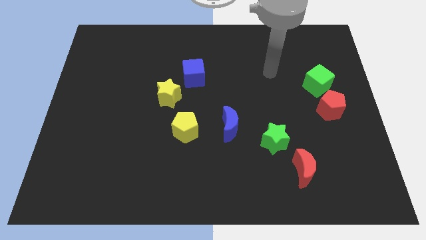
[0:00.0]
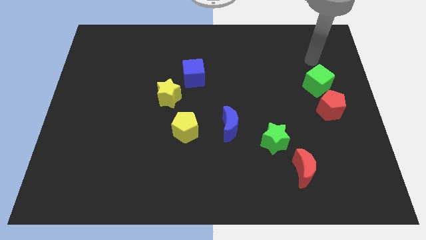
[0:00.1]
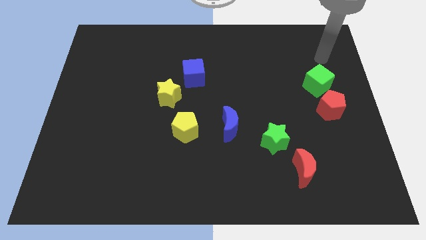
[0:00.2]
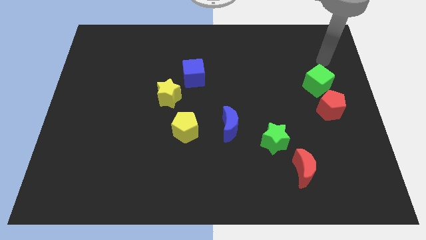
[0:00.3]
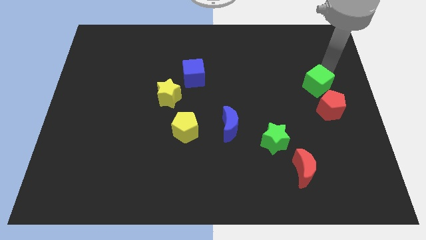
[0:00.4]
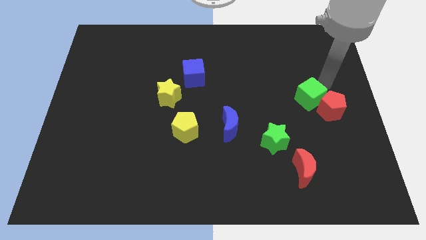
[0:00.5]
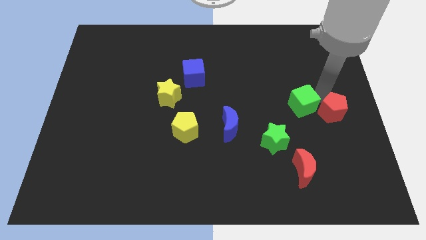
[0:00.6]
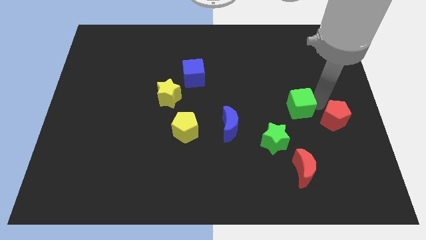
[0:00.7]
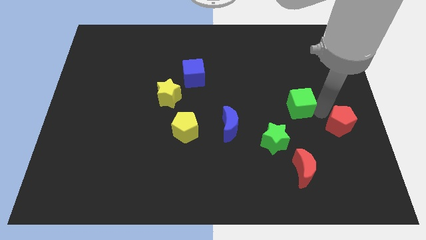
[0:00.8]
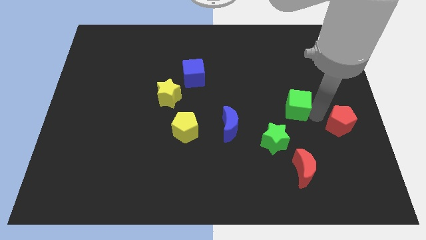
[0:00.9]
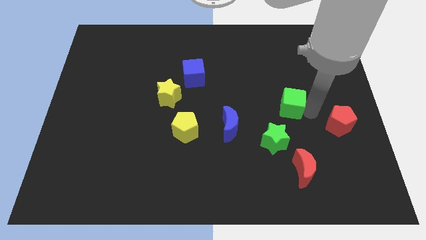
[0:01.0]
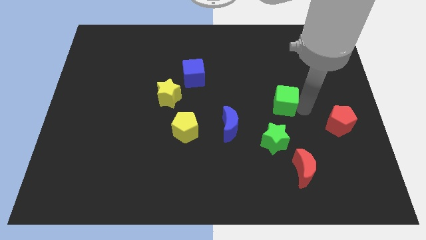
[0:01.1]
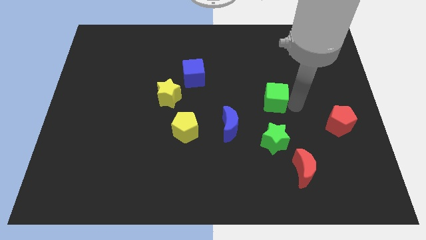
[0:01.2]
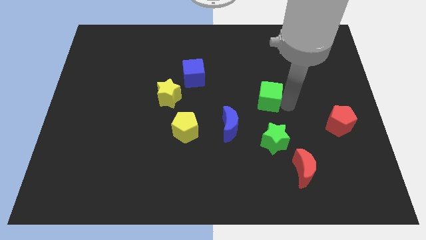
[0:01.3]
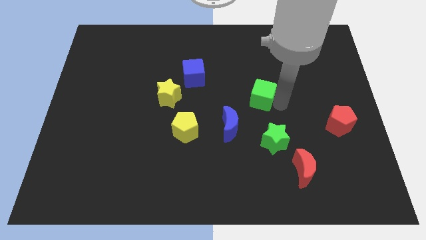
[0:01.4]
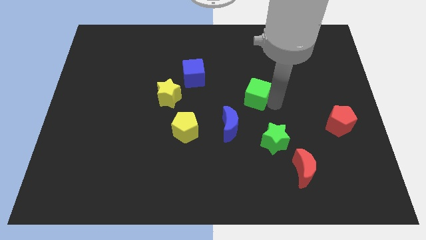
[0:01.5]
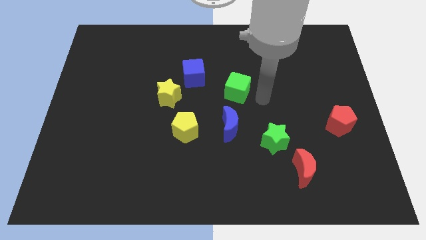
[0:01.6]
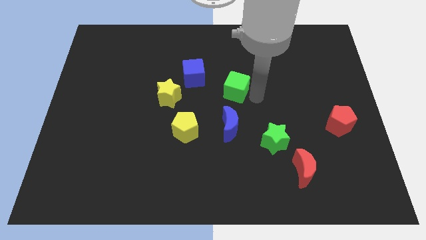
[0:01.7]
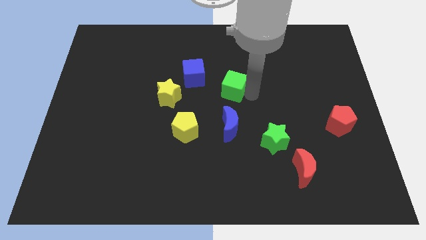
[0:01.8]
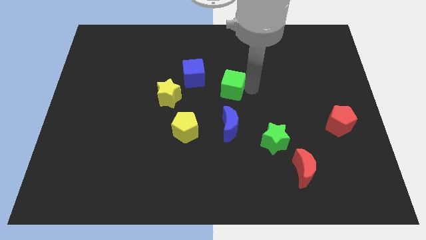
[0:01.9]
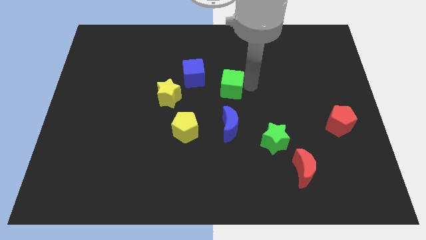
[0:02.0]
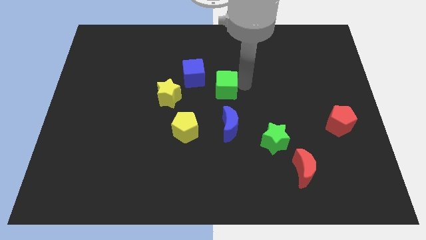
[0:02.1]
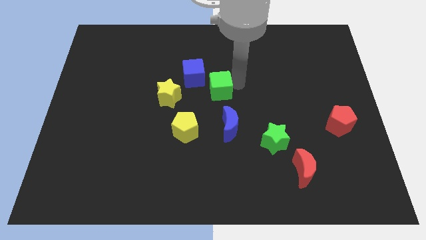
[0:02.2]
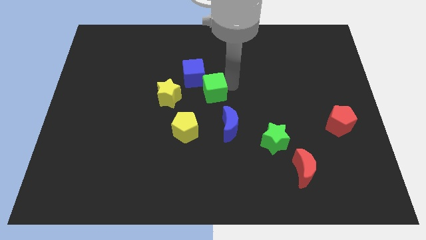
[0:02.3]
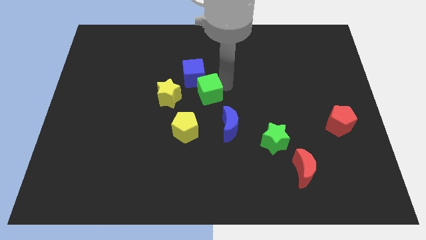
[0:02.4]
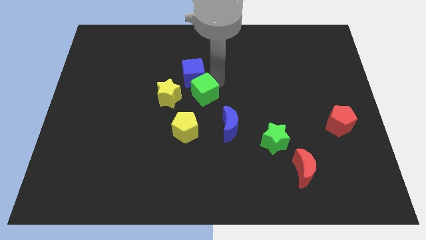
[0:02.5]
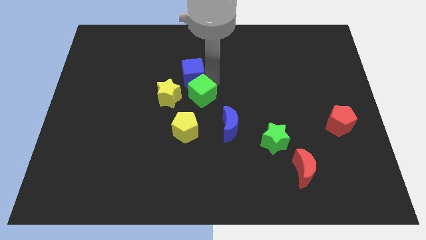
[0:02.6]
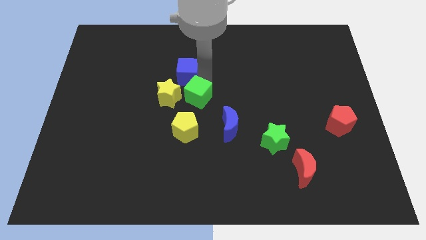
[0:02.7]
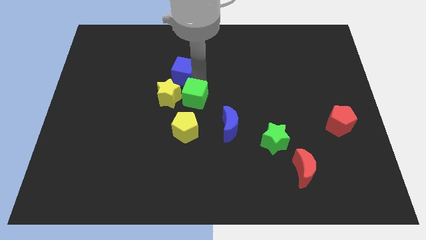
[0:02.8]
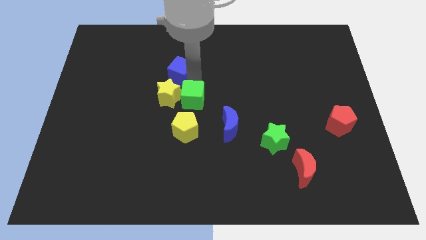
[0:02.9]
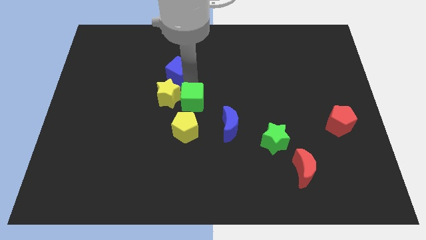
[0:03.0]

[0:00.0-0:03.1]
move the green cube towards the yellow star

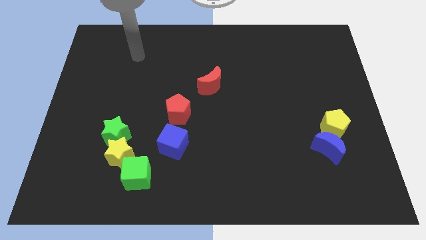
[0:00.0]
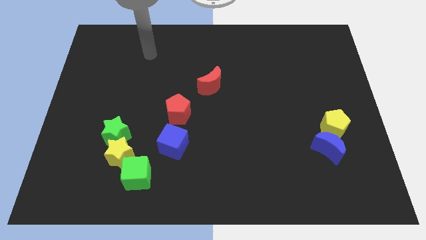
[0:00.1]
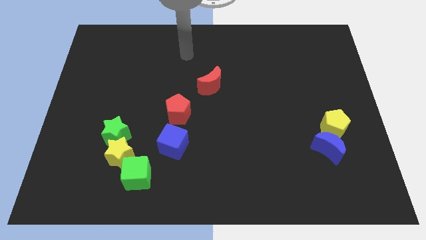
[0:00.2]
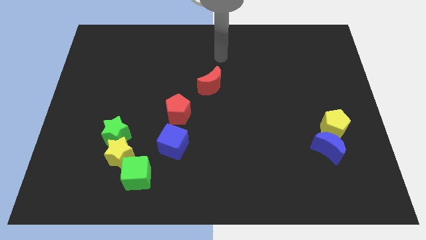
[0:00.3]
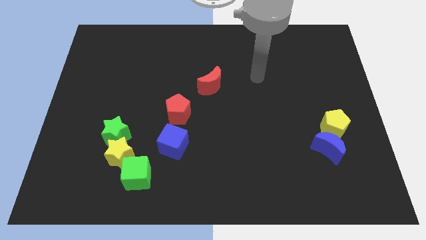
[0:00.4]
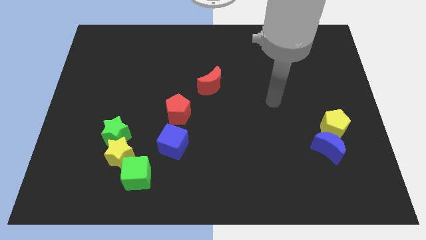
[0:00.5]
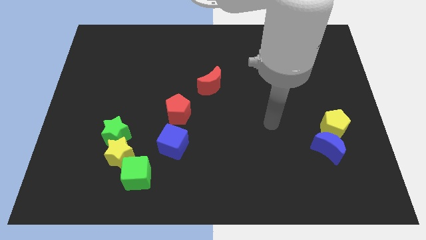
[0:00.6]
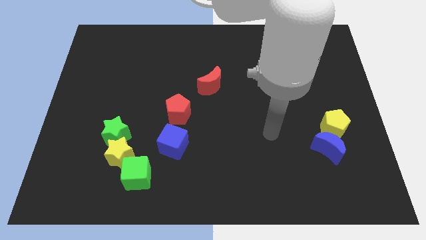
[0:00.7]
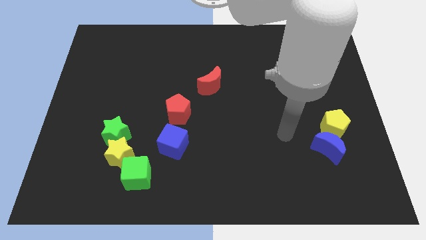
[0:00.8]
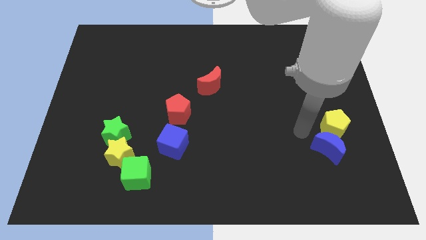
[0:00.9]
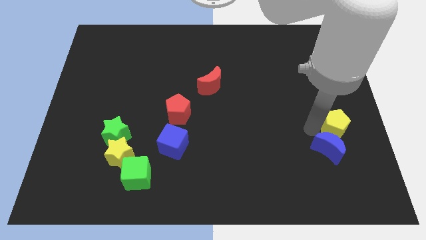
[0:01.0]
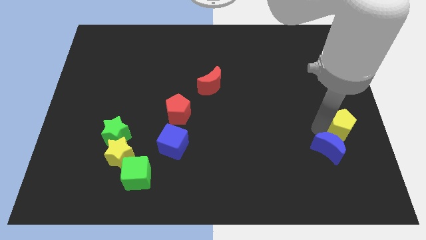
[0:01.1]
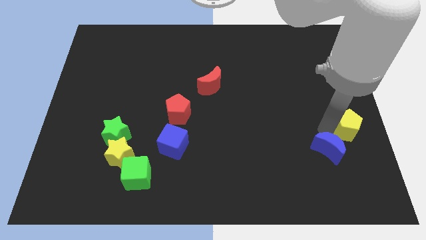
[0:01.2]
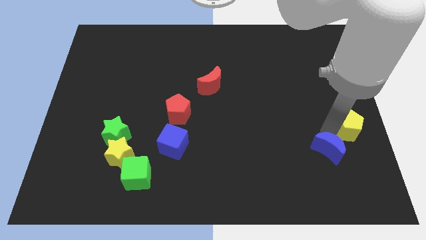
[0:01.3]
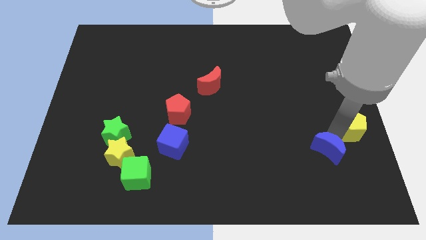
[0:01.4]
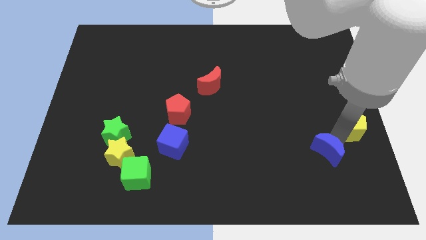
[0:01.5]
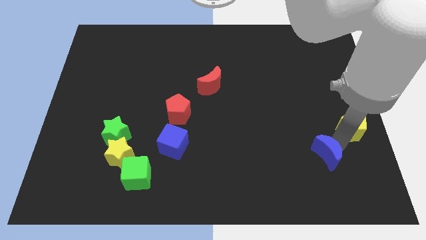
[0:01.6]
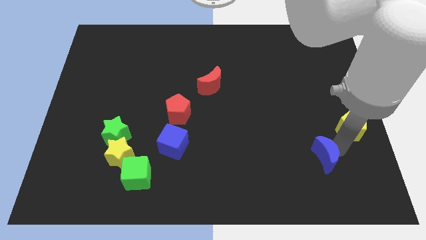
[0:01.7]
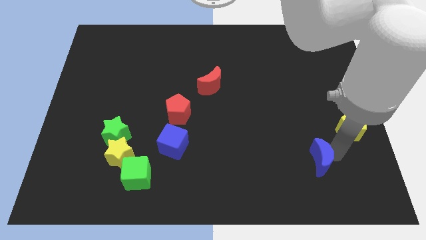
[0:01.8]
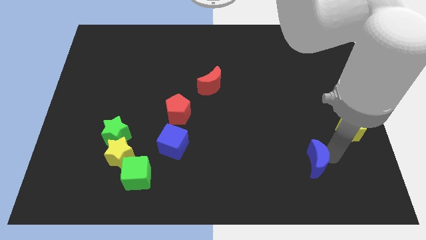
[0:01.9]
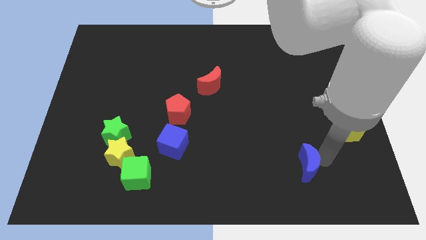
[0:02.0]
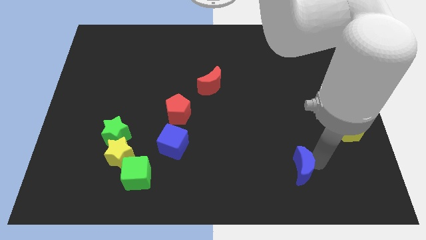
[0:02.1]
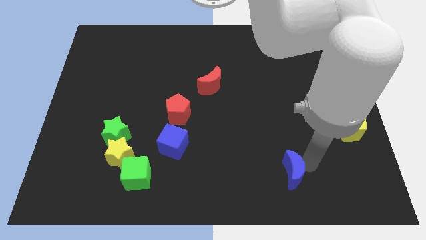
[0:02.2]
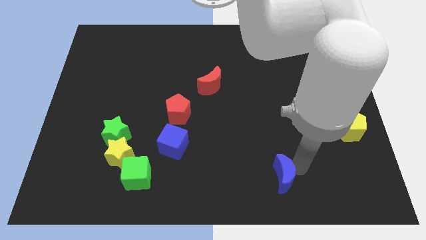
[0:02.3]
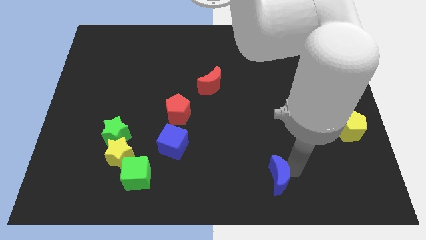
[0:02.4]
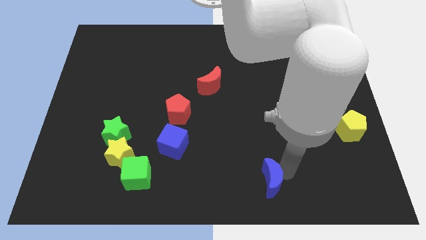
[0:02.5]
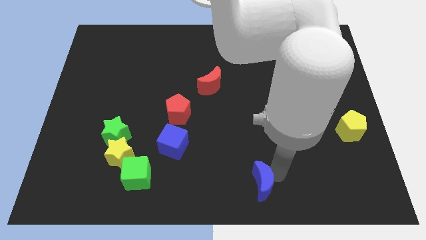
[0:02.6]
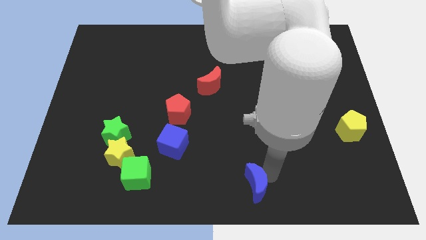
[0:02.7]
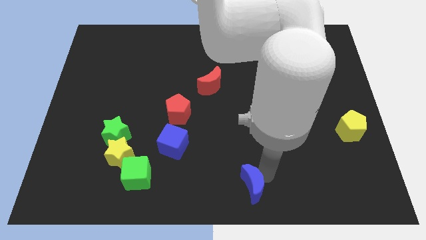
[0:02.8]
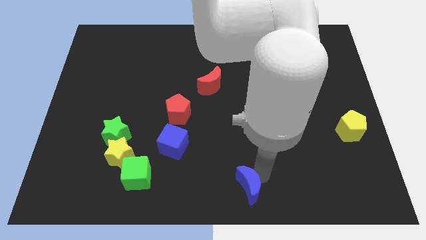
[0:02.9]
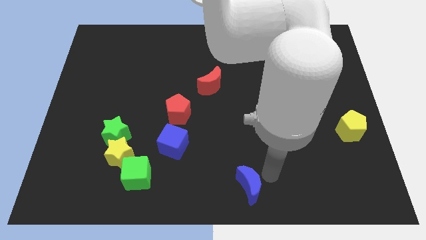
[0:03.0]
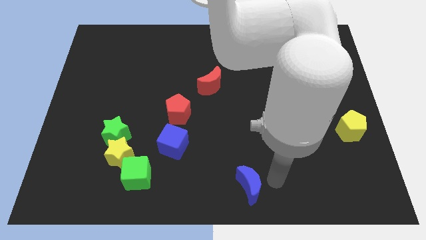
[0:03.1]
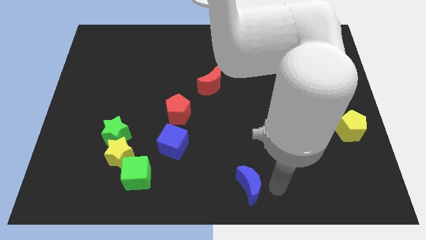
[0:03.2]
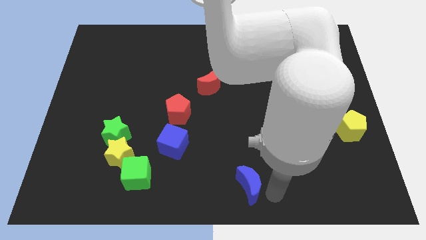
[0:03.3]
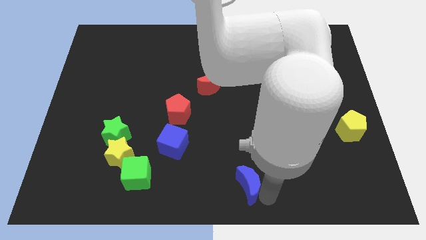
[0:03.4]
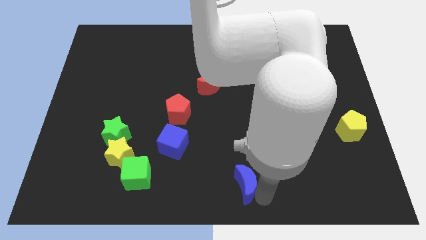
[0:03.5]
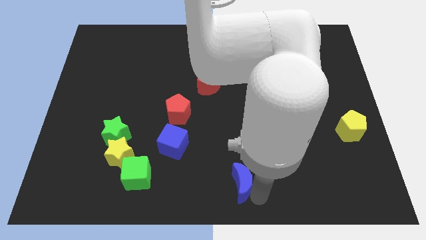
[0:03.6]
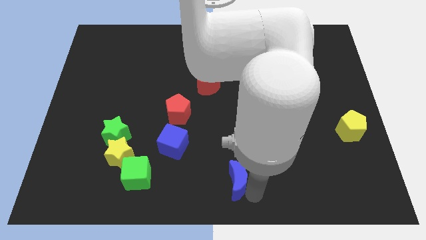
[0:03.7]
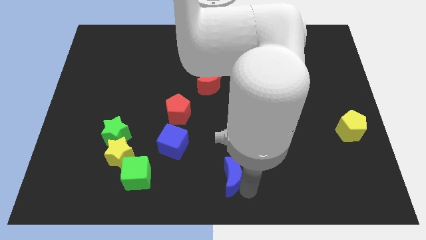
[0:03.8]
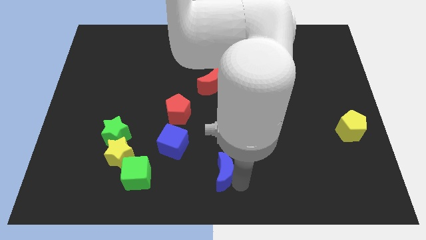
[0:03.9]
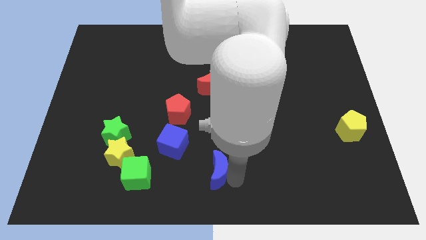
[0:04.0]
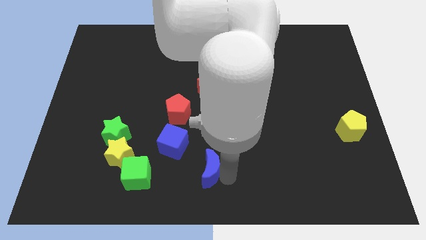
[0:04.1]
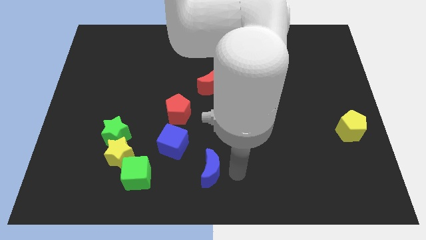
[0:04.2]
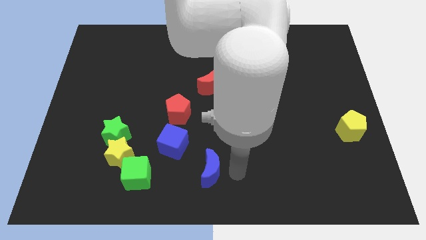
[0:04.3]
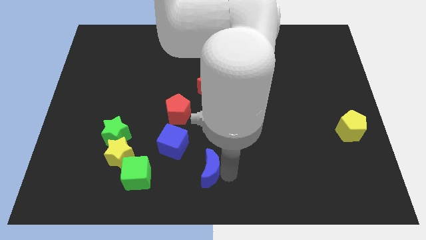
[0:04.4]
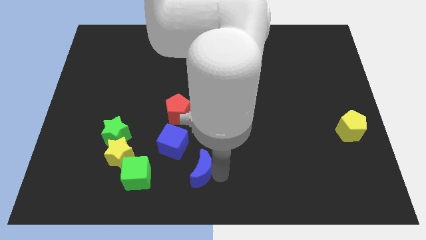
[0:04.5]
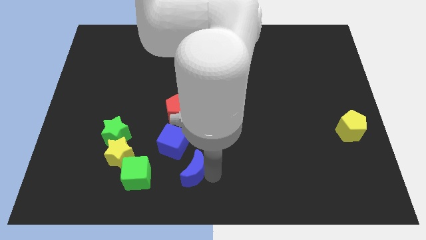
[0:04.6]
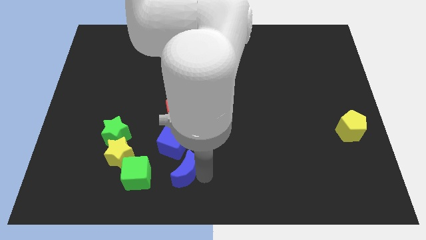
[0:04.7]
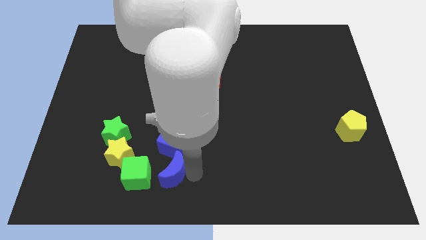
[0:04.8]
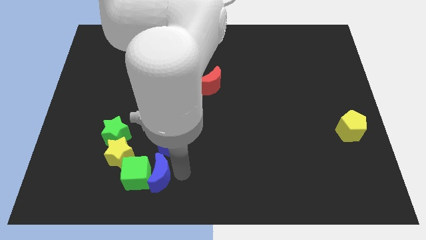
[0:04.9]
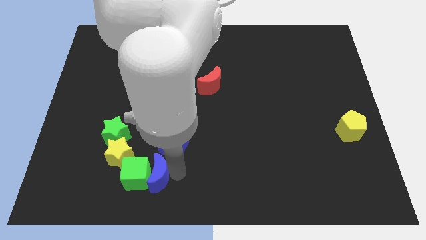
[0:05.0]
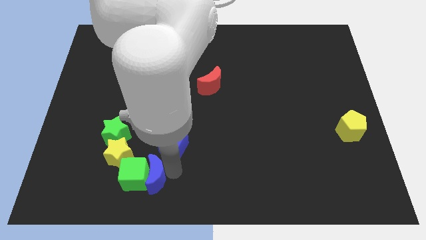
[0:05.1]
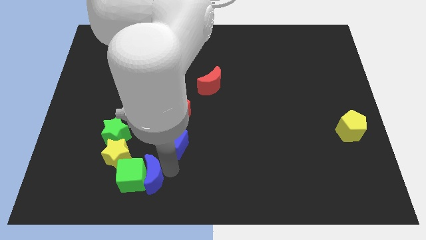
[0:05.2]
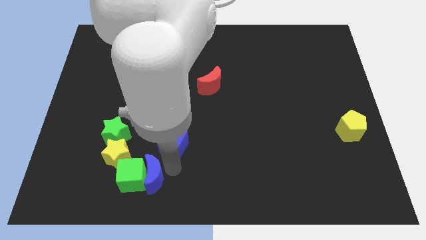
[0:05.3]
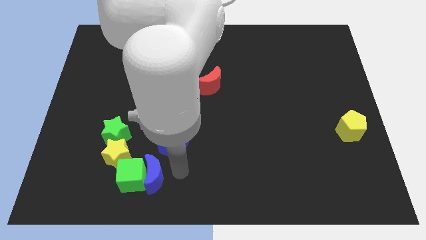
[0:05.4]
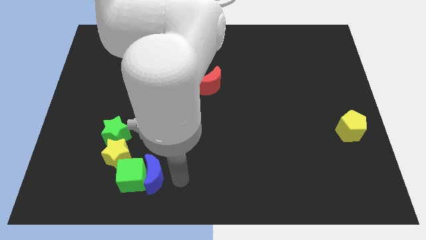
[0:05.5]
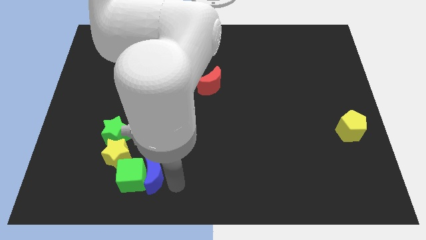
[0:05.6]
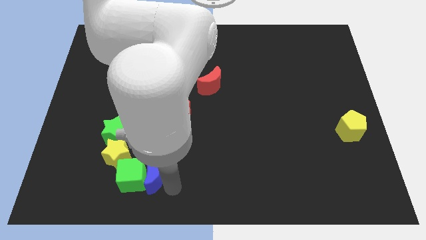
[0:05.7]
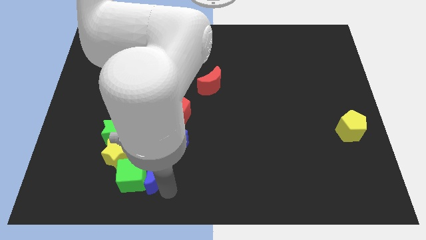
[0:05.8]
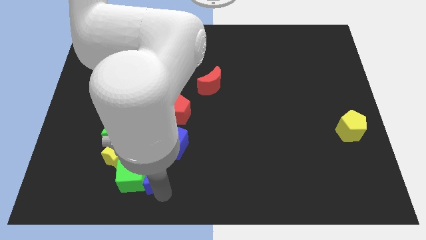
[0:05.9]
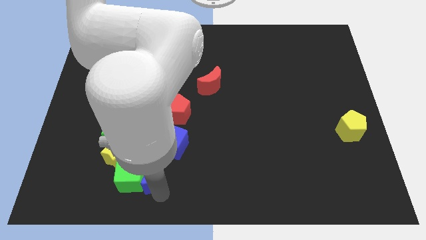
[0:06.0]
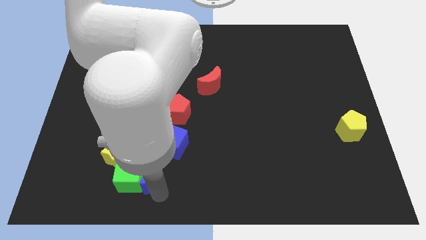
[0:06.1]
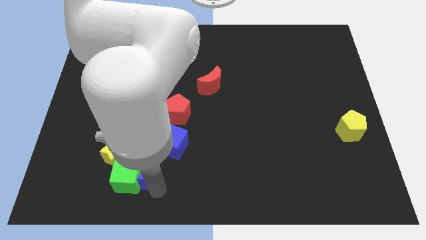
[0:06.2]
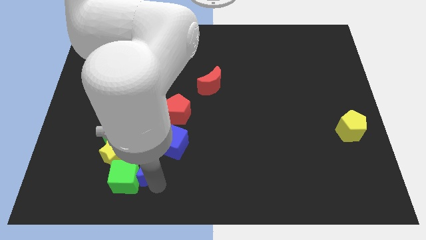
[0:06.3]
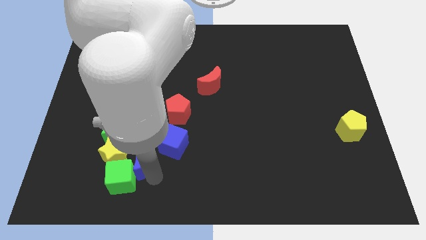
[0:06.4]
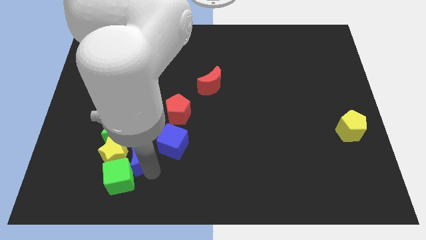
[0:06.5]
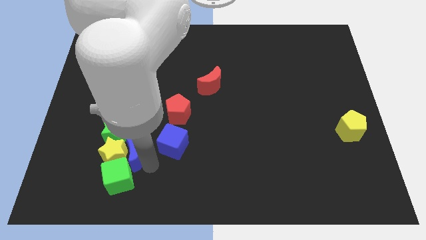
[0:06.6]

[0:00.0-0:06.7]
put the blue moon close to the yellow star
